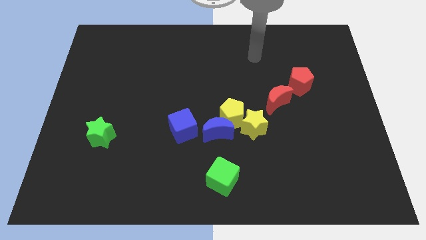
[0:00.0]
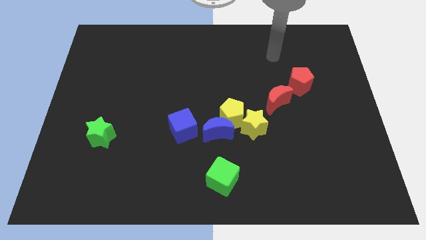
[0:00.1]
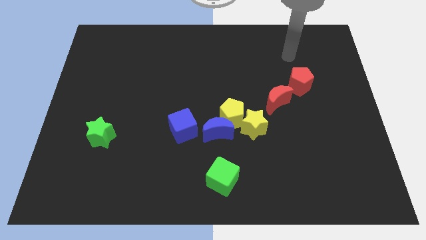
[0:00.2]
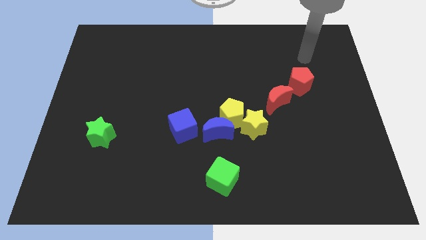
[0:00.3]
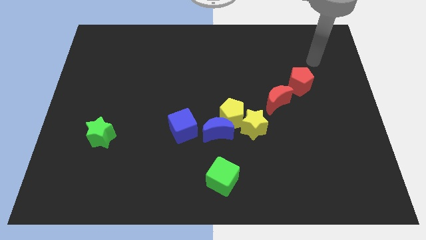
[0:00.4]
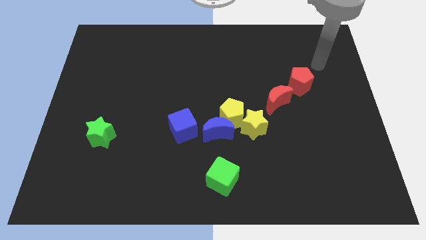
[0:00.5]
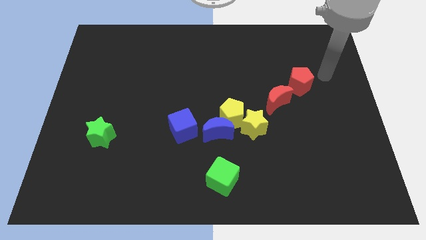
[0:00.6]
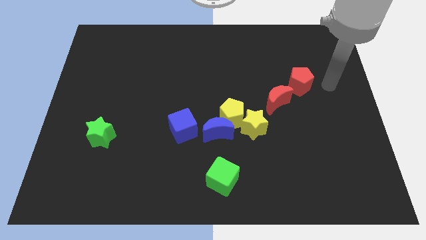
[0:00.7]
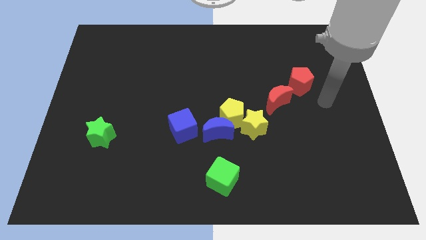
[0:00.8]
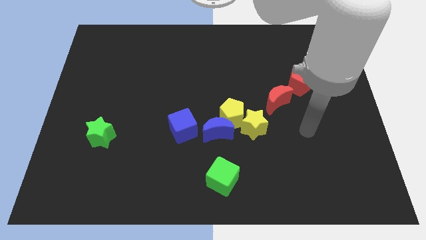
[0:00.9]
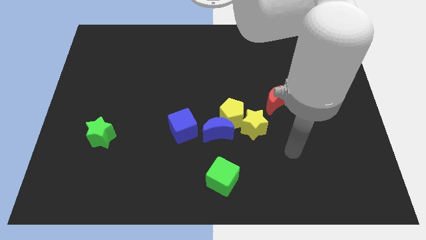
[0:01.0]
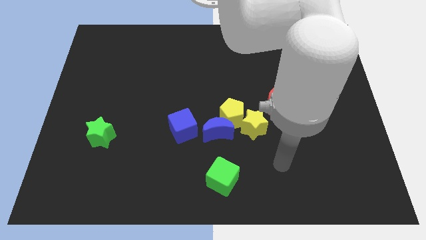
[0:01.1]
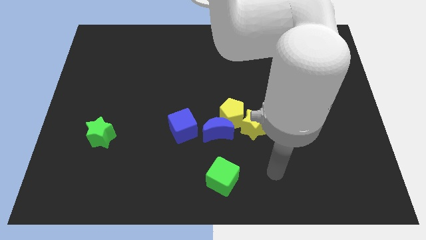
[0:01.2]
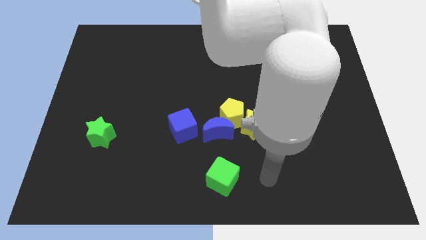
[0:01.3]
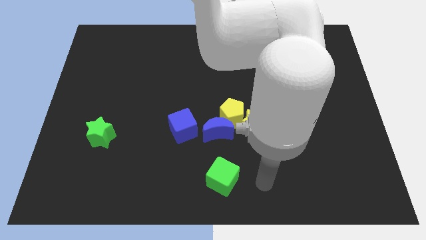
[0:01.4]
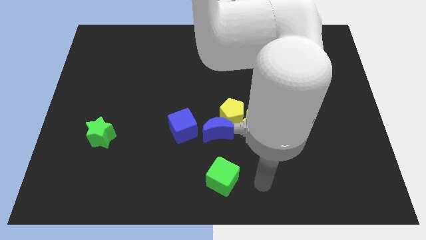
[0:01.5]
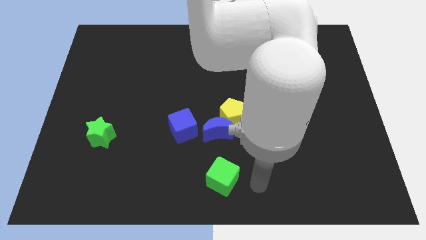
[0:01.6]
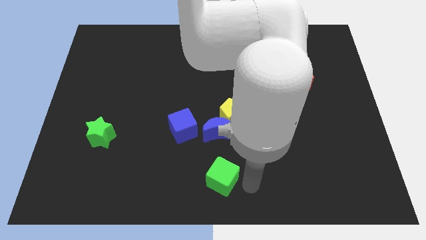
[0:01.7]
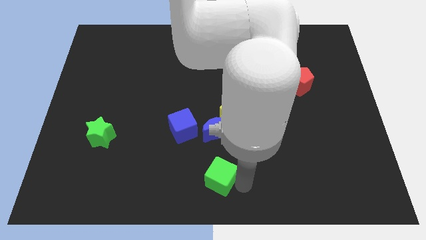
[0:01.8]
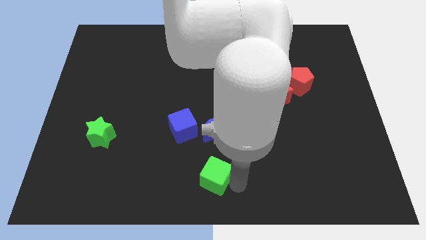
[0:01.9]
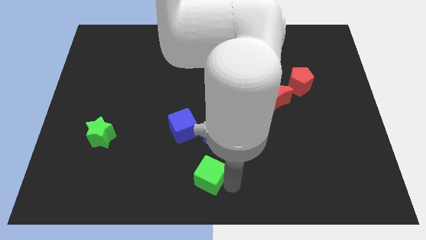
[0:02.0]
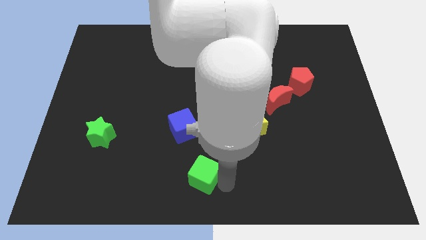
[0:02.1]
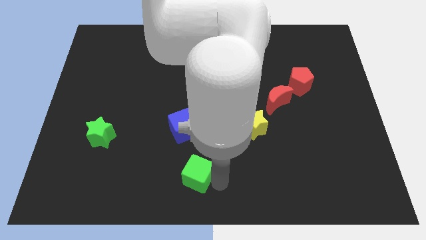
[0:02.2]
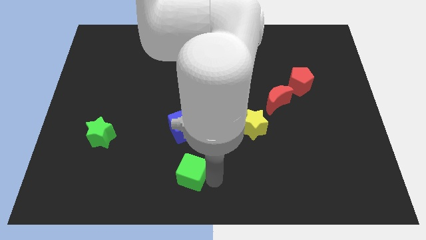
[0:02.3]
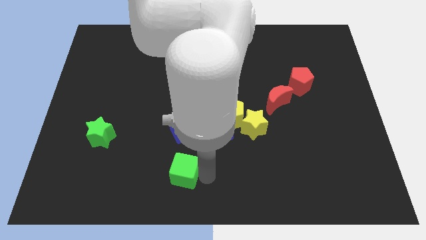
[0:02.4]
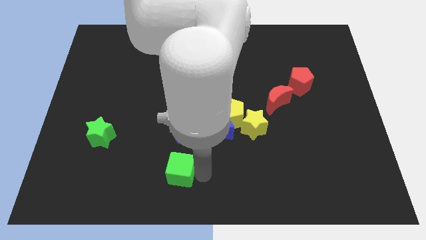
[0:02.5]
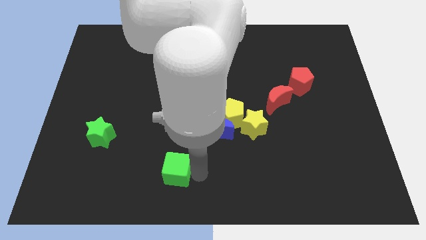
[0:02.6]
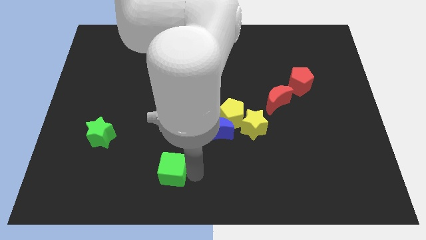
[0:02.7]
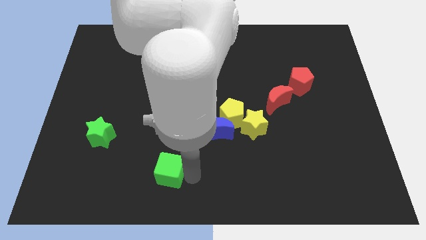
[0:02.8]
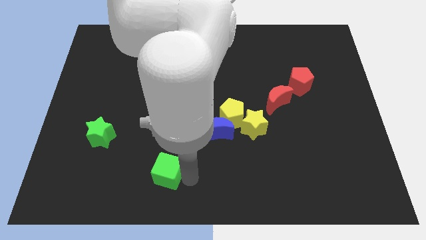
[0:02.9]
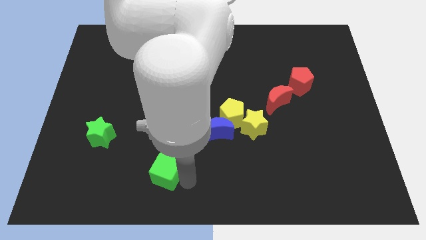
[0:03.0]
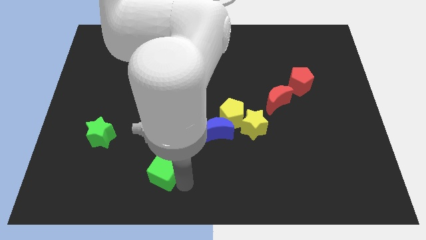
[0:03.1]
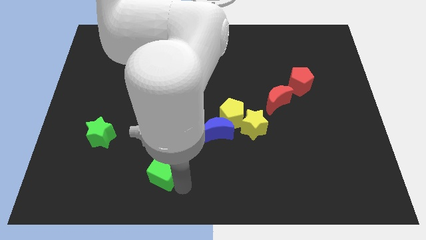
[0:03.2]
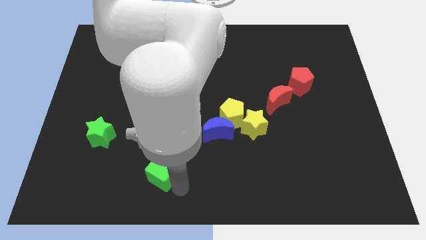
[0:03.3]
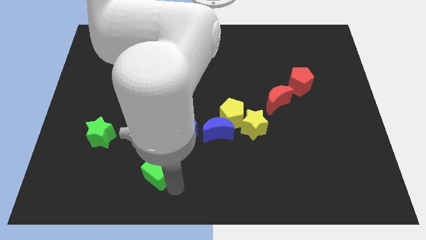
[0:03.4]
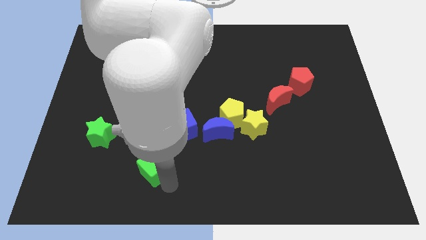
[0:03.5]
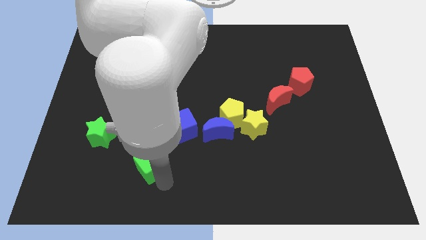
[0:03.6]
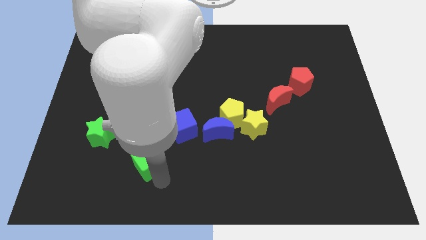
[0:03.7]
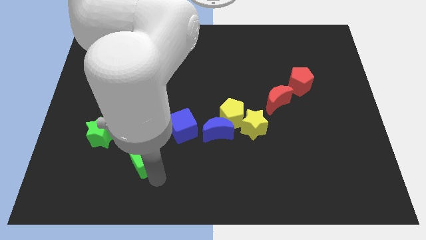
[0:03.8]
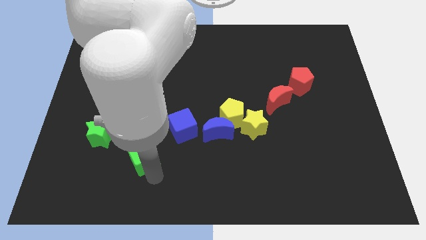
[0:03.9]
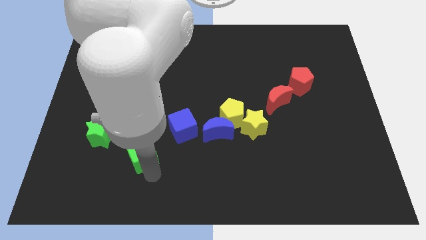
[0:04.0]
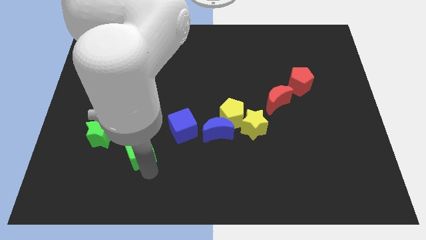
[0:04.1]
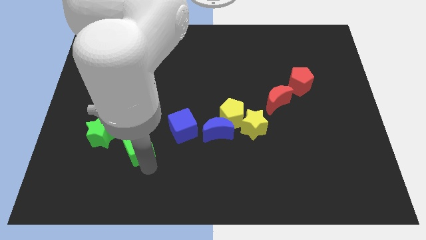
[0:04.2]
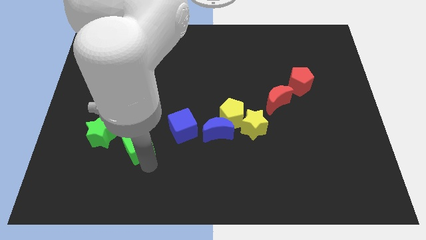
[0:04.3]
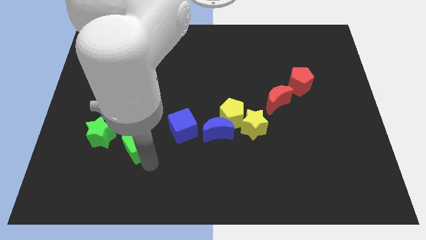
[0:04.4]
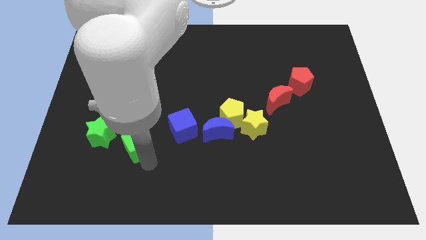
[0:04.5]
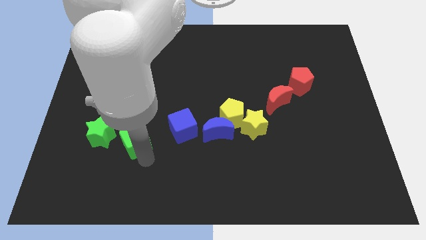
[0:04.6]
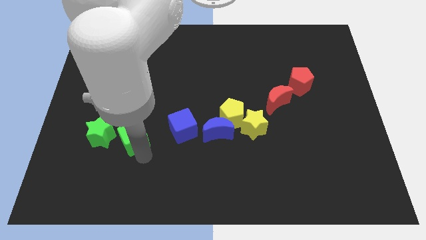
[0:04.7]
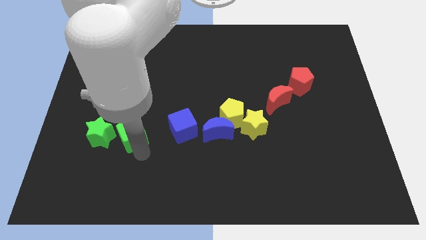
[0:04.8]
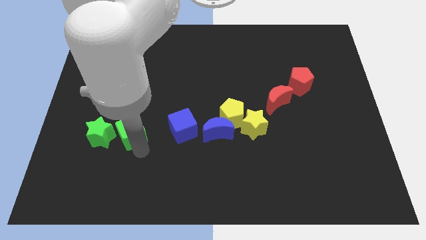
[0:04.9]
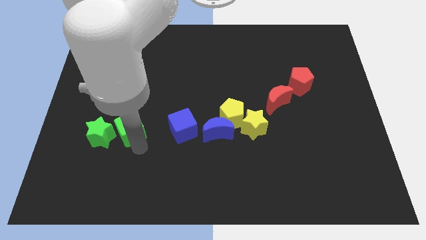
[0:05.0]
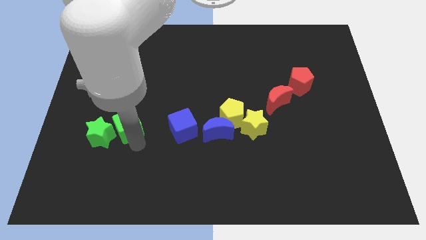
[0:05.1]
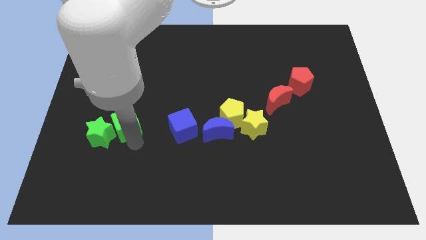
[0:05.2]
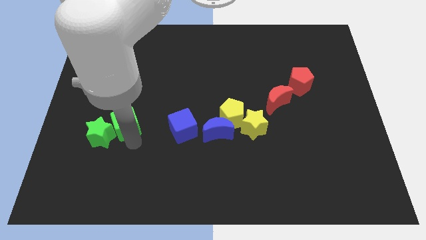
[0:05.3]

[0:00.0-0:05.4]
move the green cube towards the green star

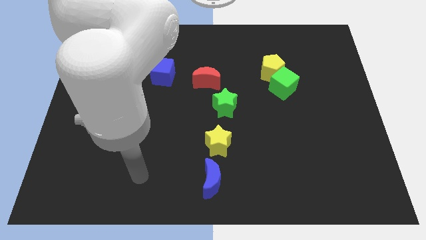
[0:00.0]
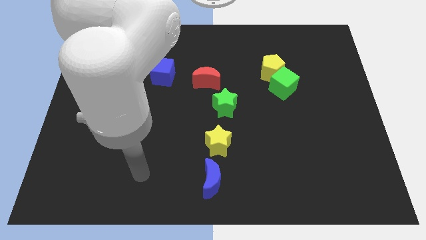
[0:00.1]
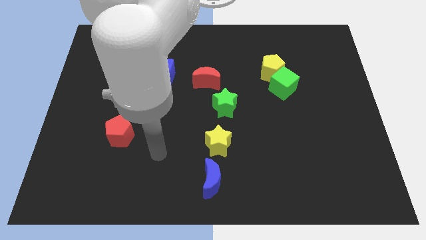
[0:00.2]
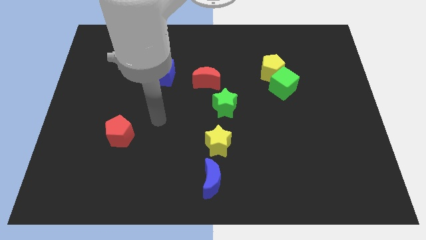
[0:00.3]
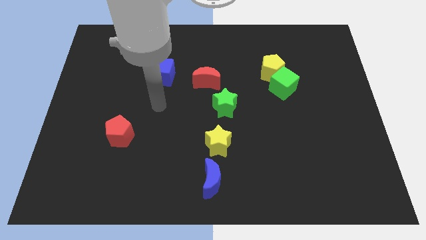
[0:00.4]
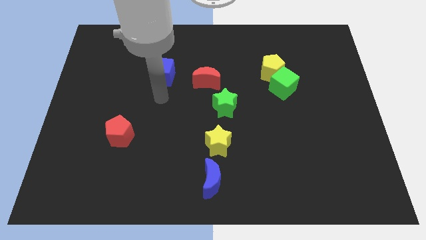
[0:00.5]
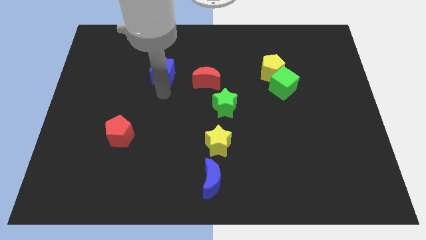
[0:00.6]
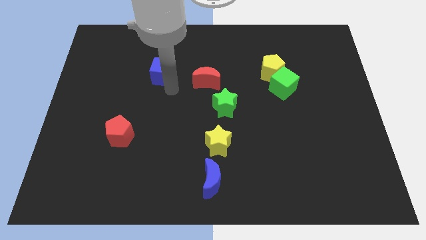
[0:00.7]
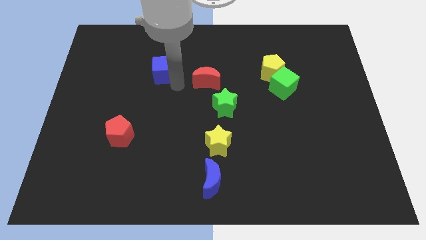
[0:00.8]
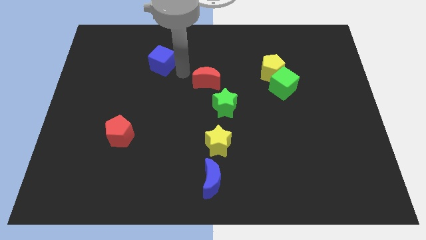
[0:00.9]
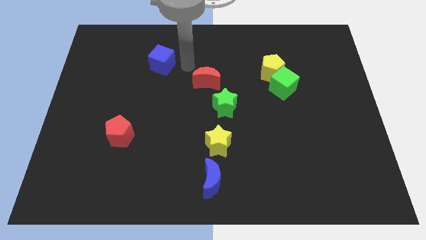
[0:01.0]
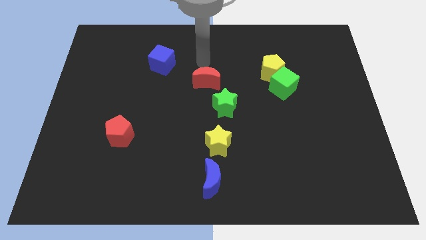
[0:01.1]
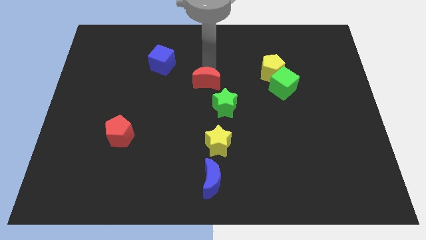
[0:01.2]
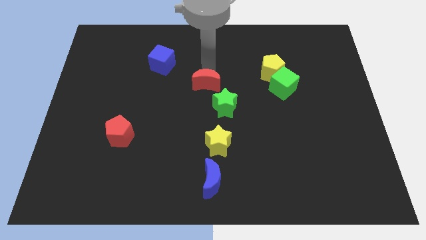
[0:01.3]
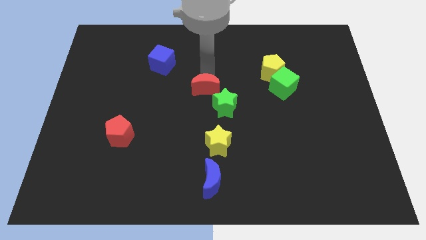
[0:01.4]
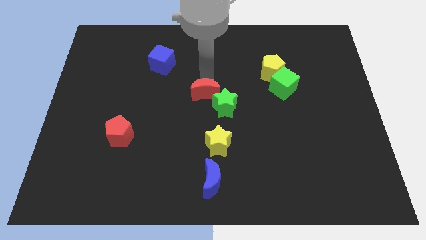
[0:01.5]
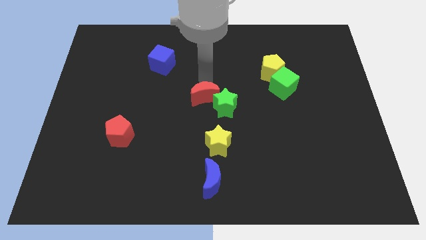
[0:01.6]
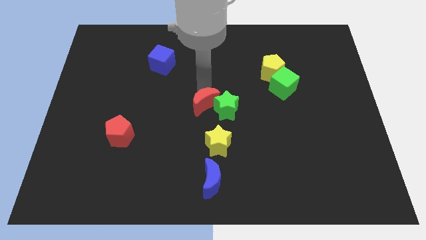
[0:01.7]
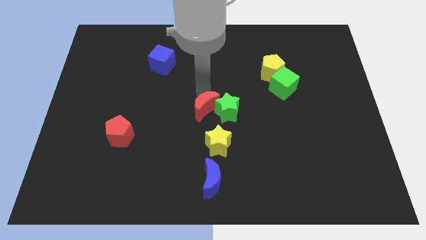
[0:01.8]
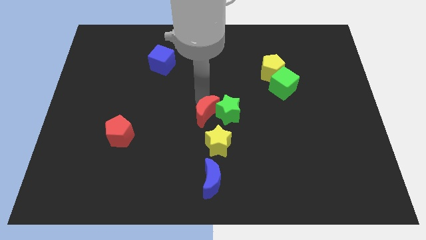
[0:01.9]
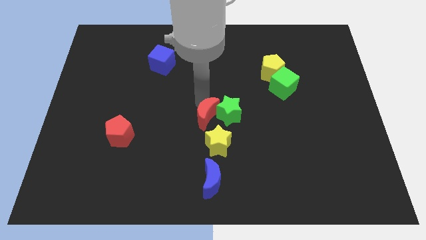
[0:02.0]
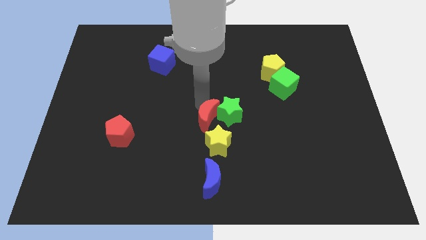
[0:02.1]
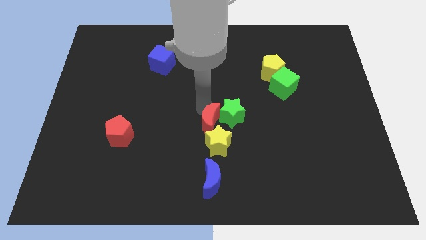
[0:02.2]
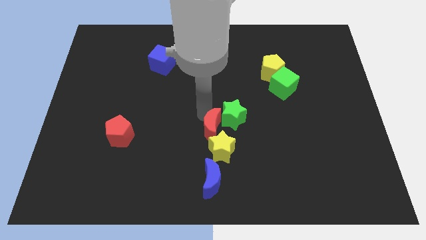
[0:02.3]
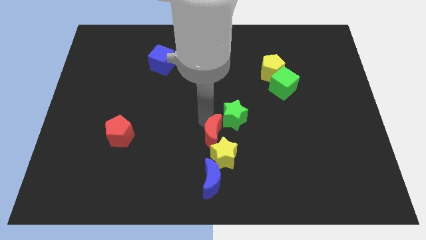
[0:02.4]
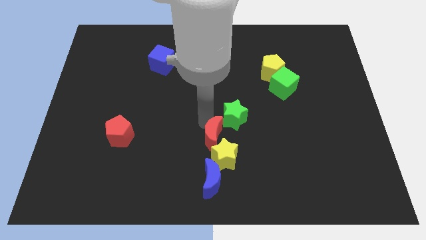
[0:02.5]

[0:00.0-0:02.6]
move the red moon to the yellow star

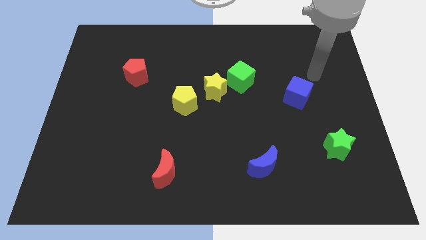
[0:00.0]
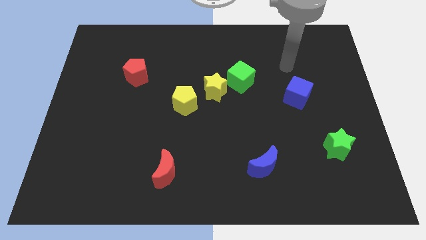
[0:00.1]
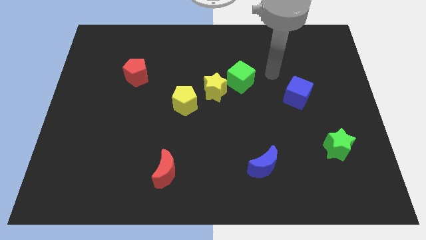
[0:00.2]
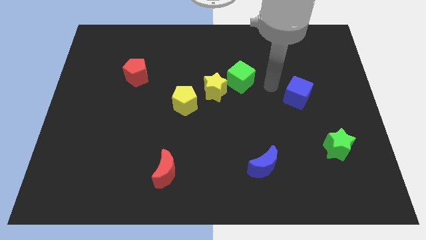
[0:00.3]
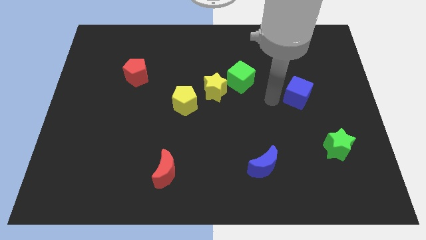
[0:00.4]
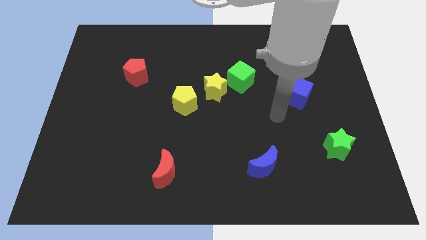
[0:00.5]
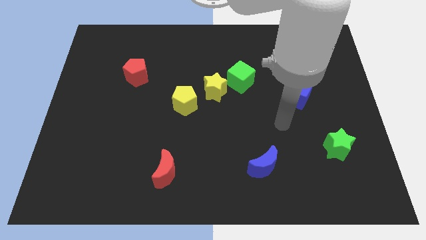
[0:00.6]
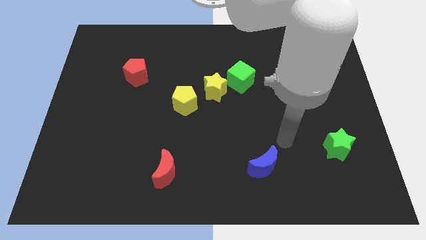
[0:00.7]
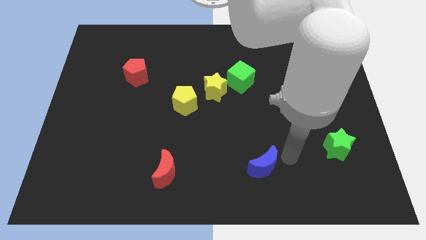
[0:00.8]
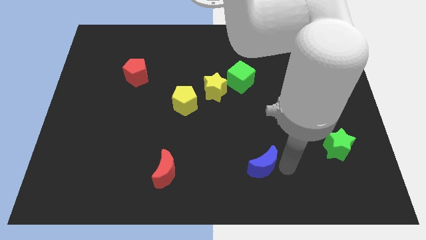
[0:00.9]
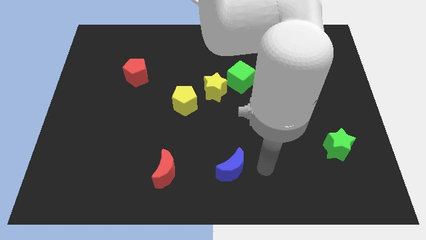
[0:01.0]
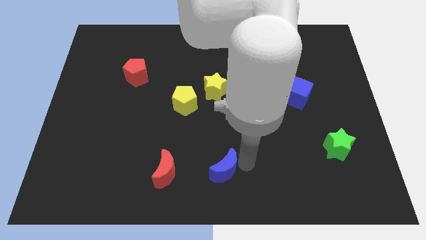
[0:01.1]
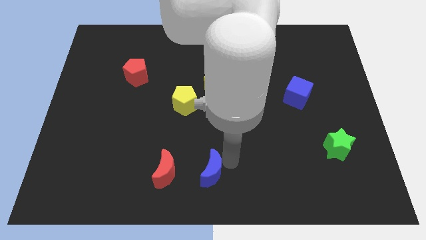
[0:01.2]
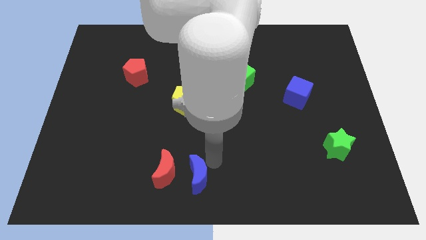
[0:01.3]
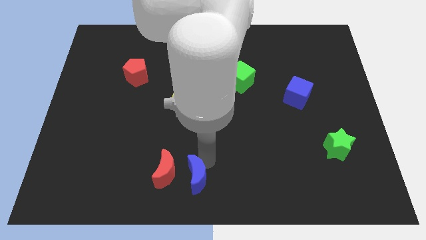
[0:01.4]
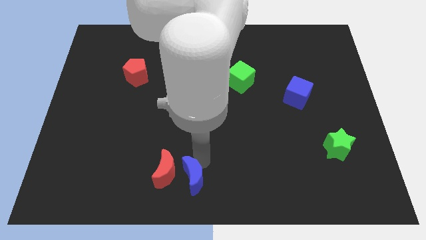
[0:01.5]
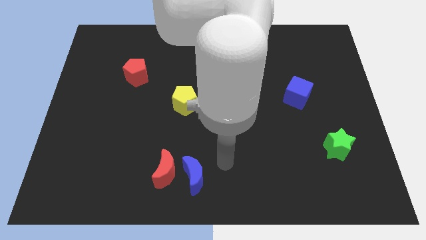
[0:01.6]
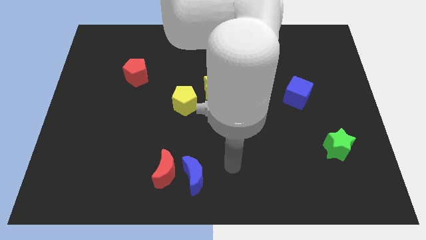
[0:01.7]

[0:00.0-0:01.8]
push the blue moon next to the red moon
